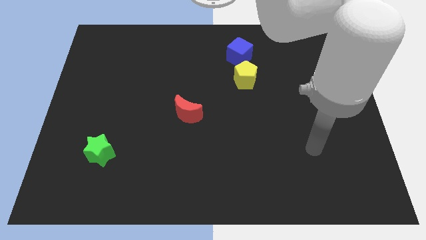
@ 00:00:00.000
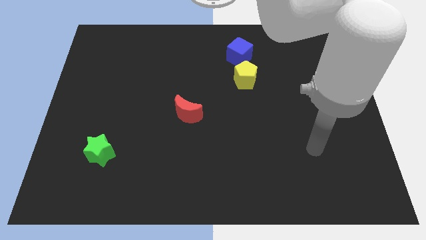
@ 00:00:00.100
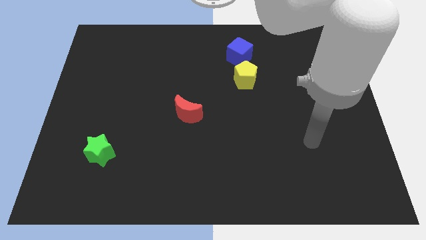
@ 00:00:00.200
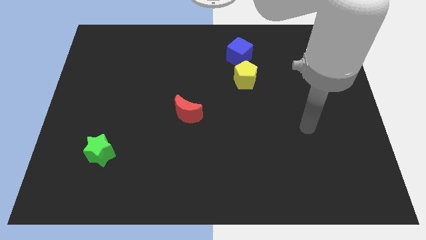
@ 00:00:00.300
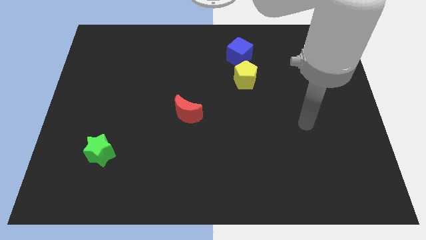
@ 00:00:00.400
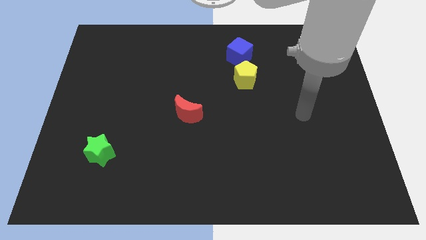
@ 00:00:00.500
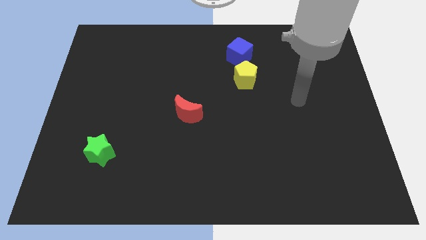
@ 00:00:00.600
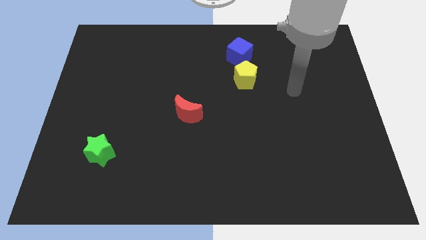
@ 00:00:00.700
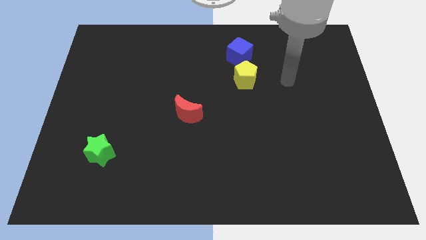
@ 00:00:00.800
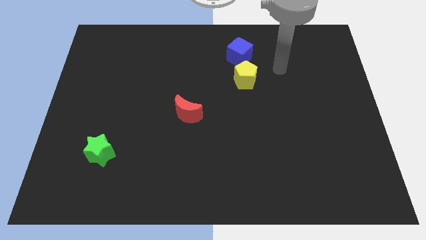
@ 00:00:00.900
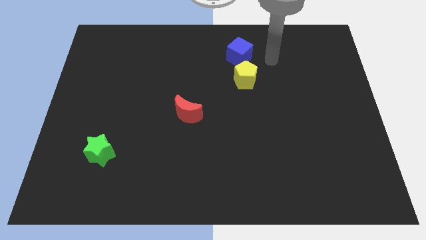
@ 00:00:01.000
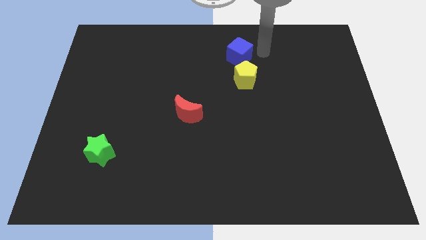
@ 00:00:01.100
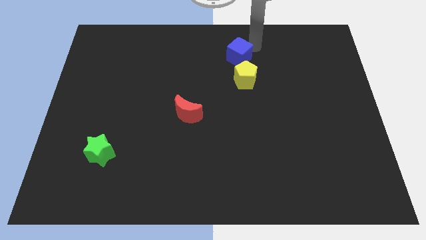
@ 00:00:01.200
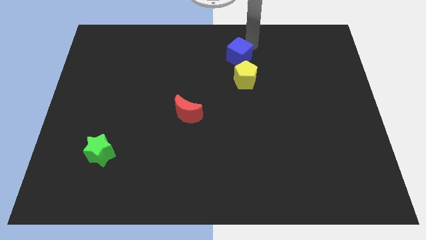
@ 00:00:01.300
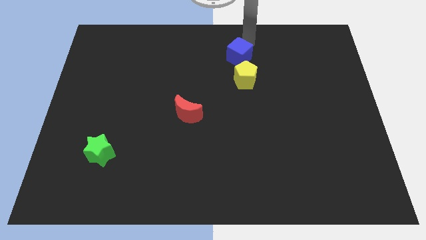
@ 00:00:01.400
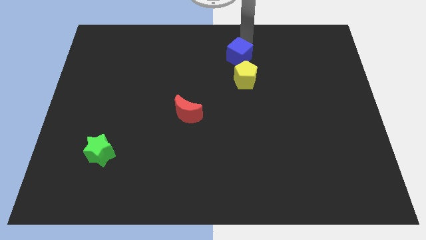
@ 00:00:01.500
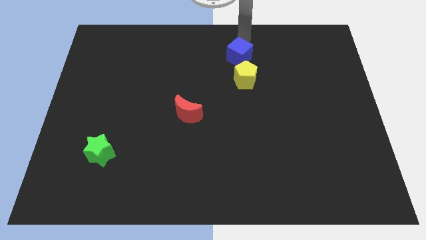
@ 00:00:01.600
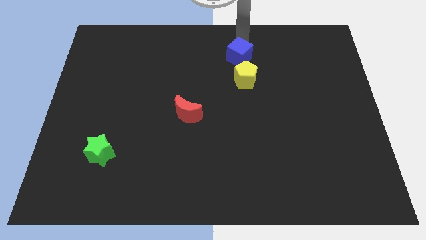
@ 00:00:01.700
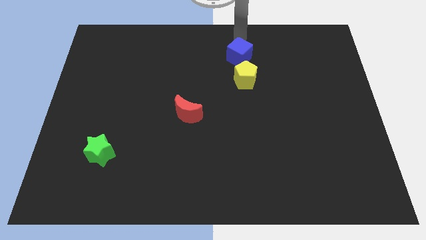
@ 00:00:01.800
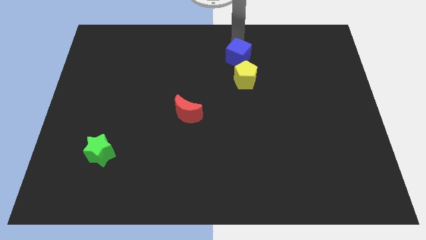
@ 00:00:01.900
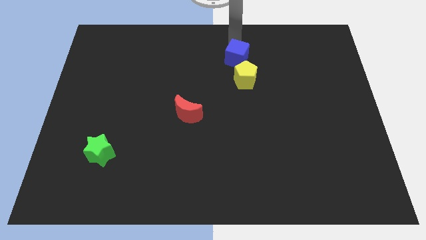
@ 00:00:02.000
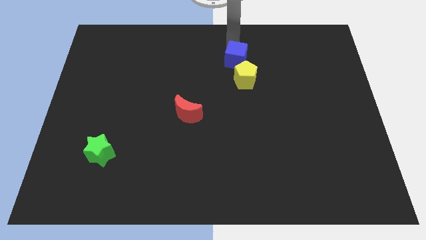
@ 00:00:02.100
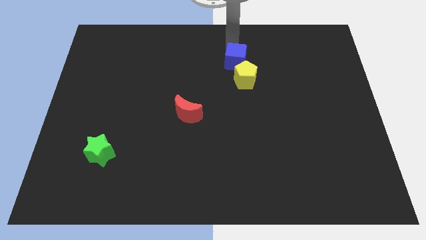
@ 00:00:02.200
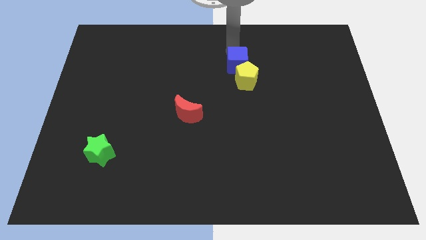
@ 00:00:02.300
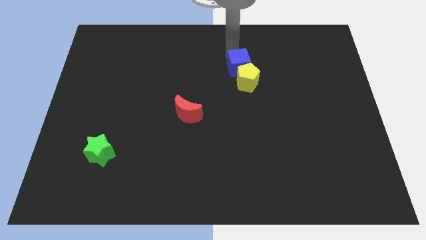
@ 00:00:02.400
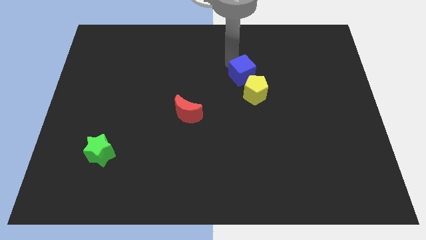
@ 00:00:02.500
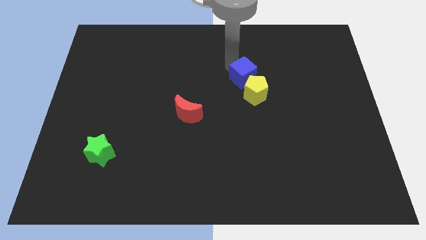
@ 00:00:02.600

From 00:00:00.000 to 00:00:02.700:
put the blue cube to the yellow block

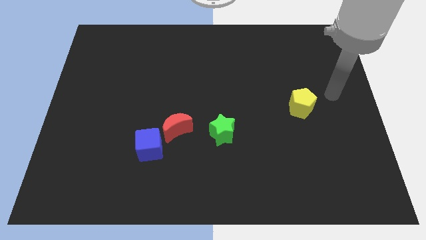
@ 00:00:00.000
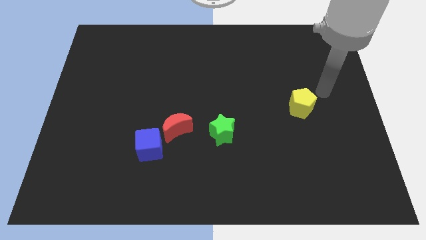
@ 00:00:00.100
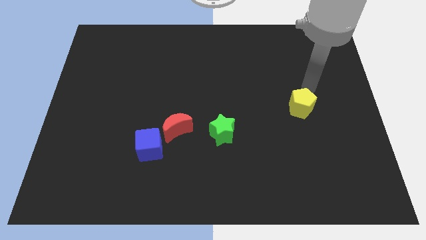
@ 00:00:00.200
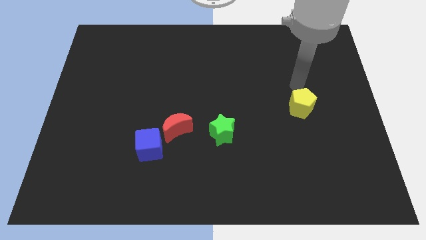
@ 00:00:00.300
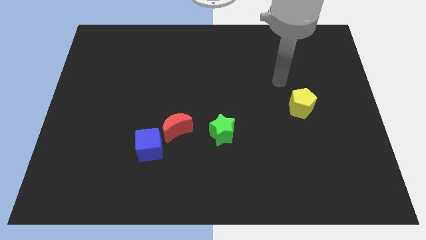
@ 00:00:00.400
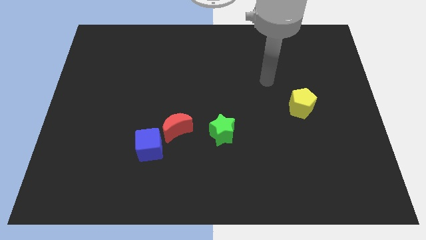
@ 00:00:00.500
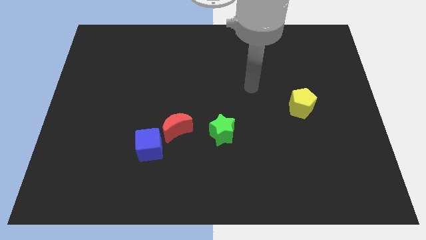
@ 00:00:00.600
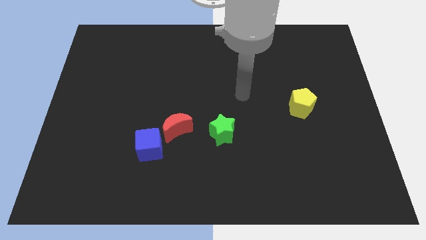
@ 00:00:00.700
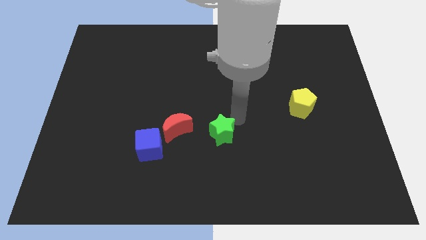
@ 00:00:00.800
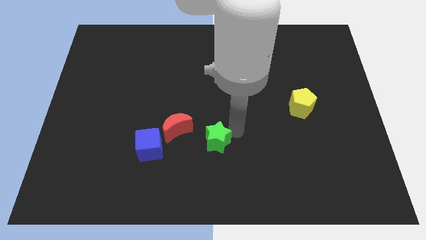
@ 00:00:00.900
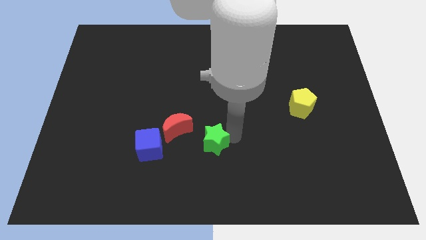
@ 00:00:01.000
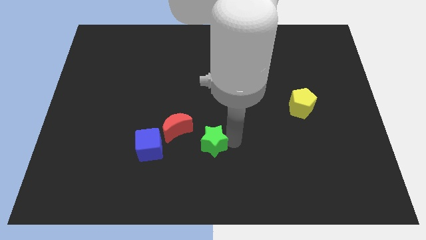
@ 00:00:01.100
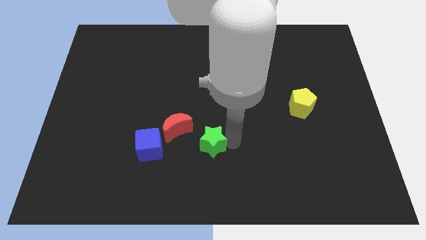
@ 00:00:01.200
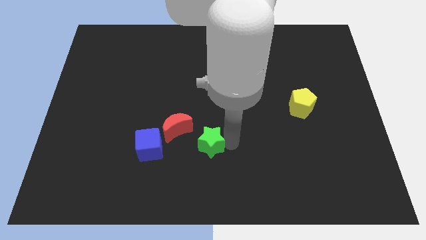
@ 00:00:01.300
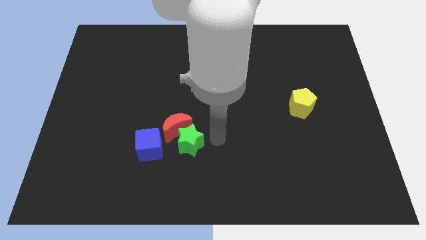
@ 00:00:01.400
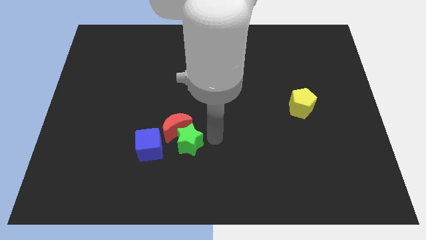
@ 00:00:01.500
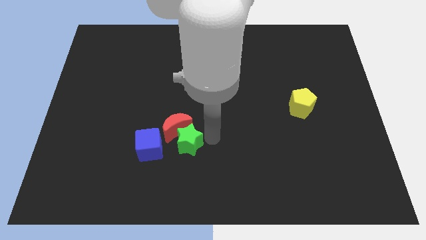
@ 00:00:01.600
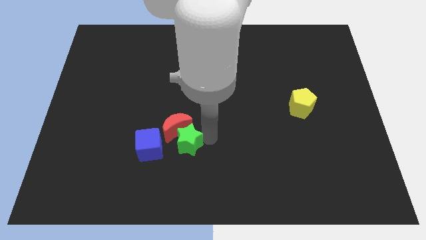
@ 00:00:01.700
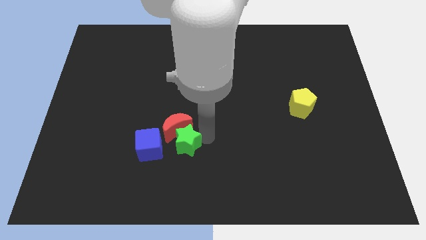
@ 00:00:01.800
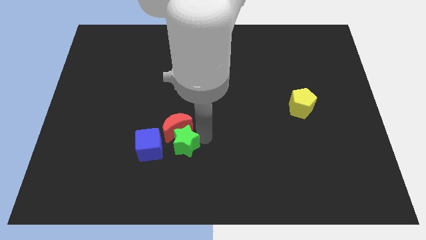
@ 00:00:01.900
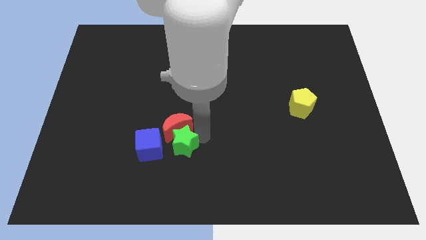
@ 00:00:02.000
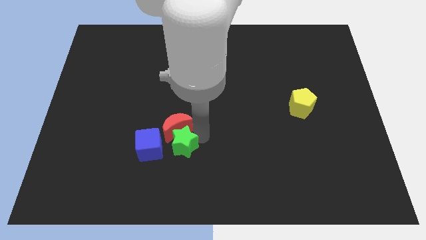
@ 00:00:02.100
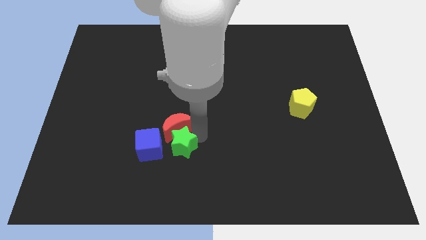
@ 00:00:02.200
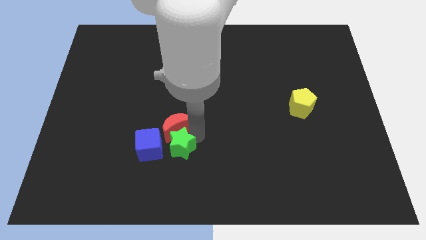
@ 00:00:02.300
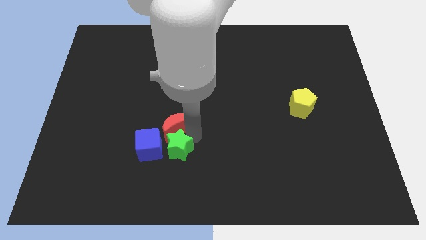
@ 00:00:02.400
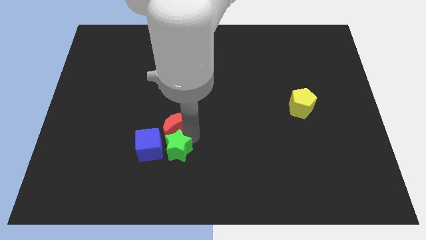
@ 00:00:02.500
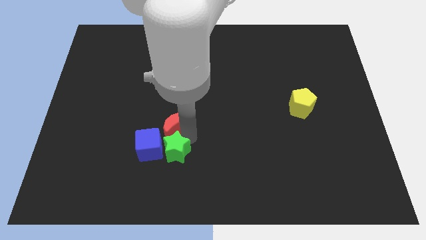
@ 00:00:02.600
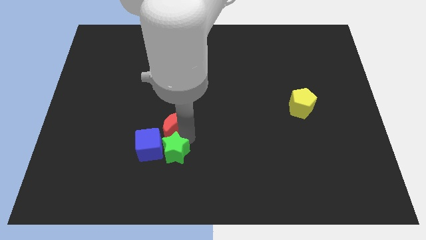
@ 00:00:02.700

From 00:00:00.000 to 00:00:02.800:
slide the green star close to the blue cube

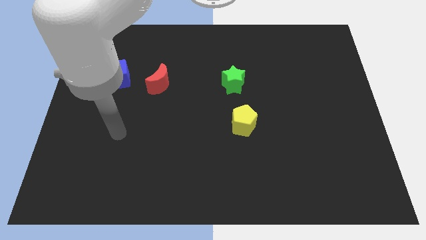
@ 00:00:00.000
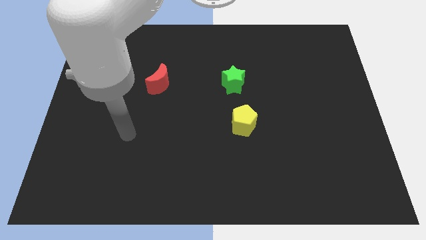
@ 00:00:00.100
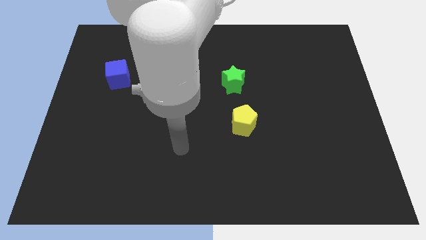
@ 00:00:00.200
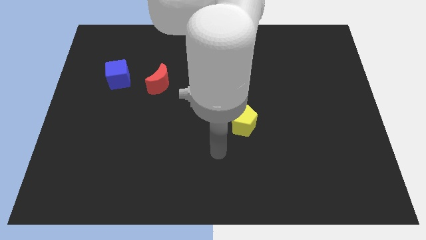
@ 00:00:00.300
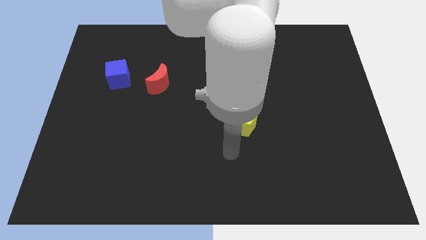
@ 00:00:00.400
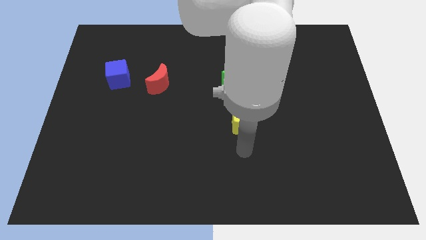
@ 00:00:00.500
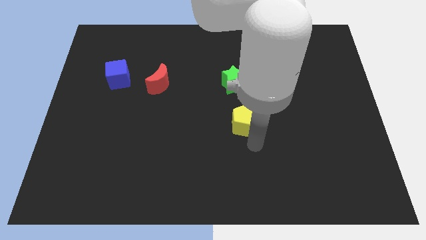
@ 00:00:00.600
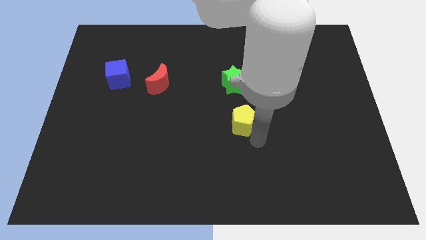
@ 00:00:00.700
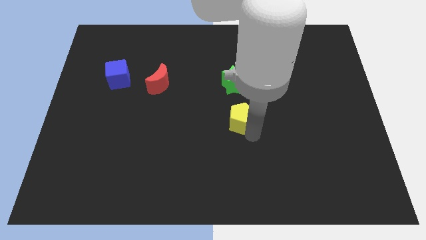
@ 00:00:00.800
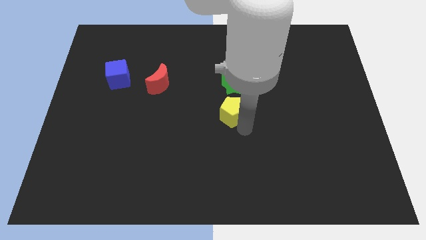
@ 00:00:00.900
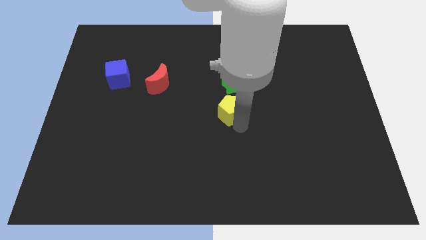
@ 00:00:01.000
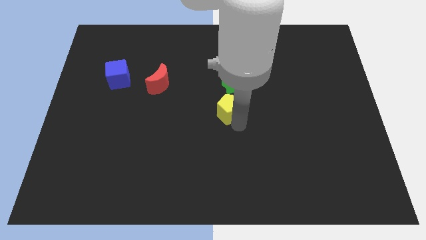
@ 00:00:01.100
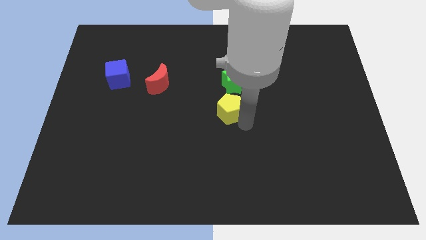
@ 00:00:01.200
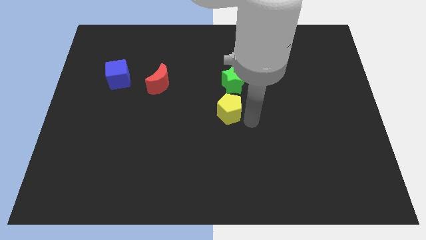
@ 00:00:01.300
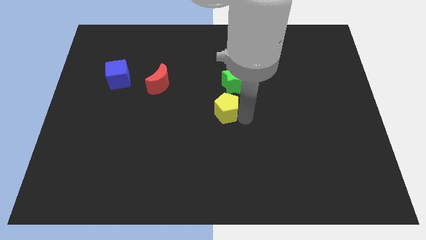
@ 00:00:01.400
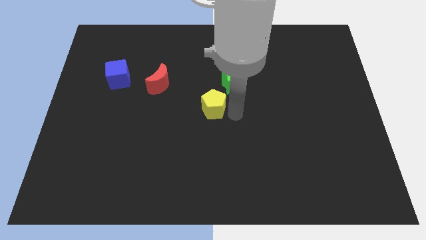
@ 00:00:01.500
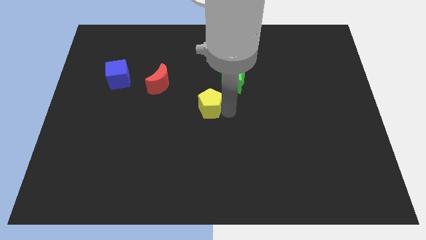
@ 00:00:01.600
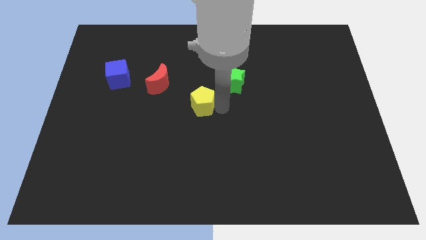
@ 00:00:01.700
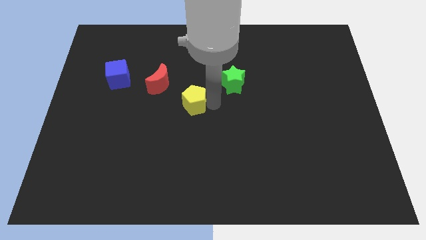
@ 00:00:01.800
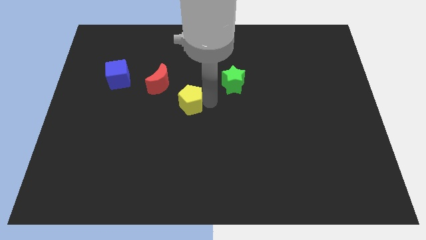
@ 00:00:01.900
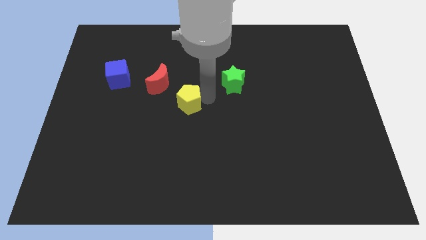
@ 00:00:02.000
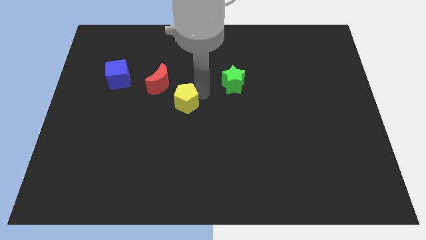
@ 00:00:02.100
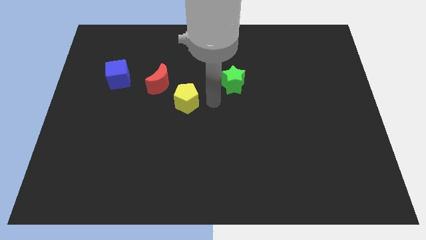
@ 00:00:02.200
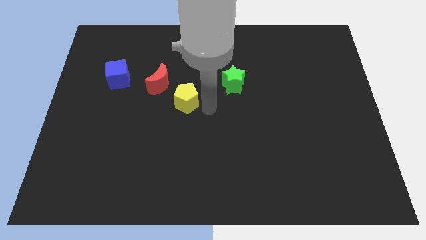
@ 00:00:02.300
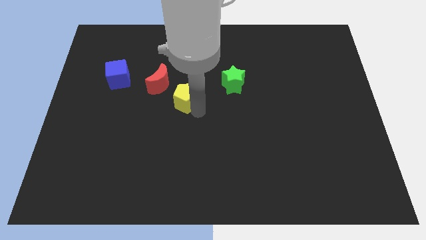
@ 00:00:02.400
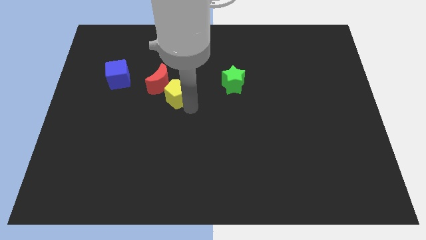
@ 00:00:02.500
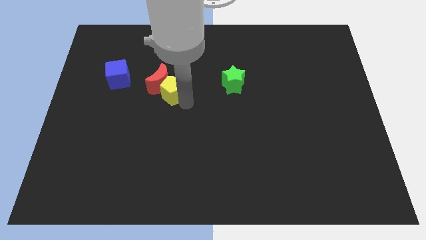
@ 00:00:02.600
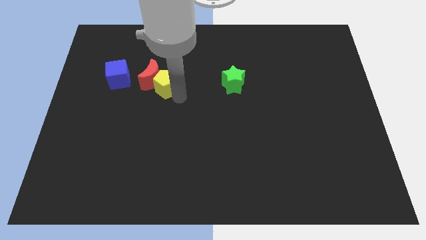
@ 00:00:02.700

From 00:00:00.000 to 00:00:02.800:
move the yellow pentagon towards the moon

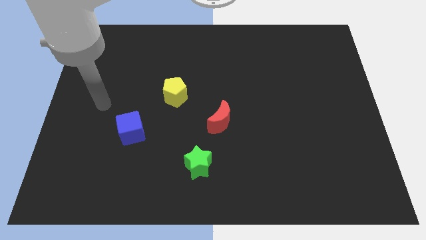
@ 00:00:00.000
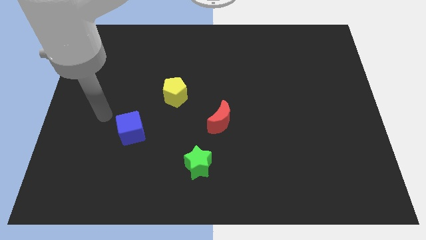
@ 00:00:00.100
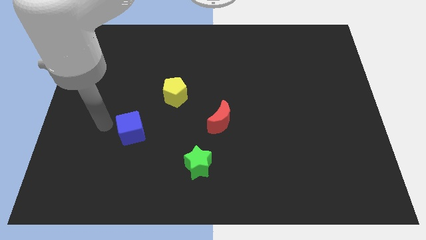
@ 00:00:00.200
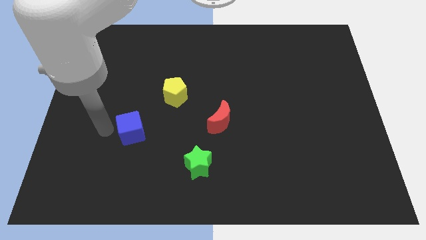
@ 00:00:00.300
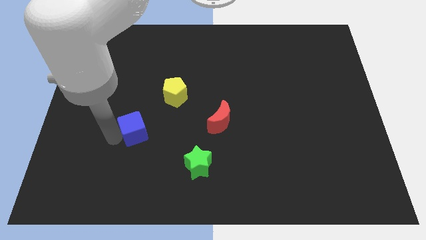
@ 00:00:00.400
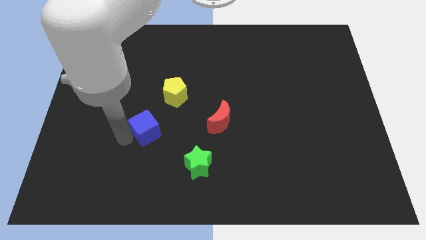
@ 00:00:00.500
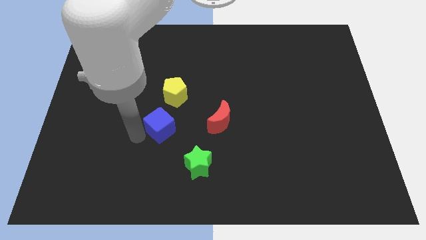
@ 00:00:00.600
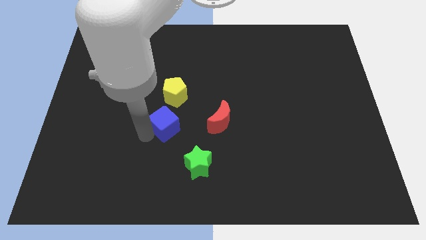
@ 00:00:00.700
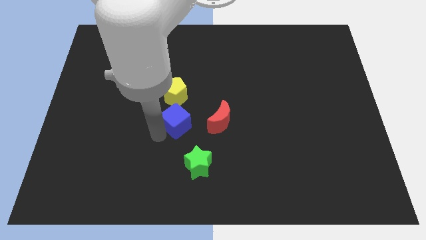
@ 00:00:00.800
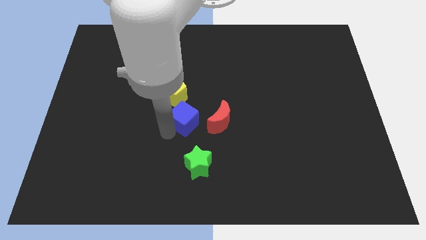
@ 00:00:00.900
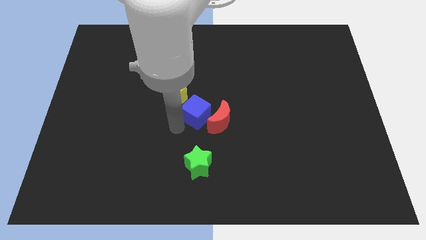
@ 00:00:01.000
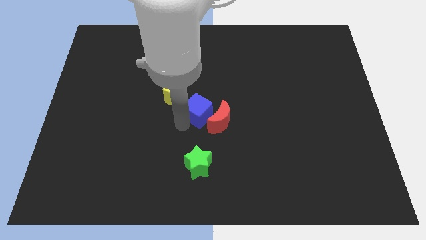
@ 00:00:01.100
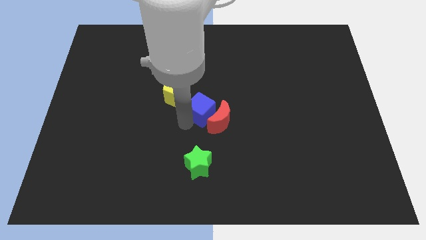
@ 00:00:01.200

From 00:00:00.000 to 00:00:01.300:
push the blue block towards the red moon
